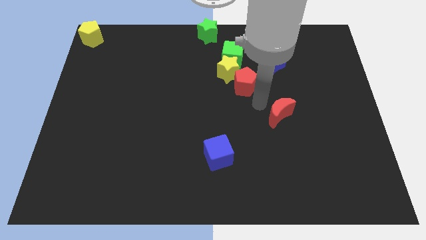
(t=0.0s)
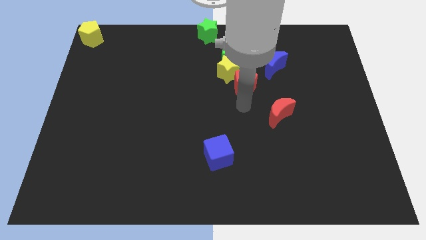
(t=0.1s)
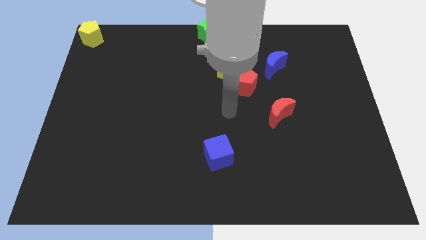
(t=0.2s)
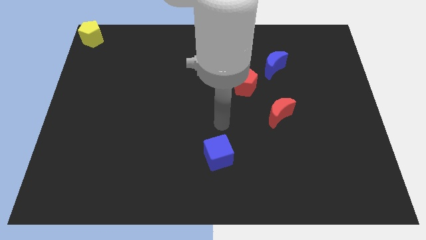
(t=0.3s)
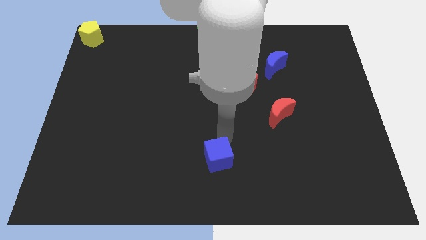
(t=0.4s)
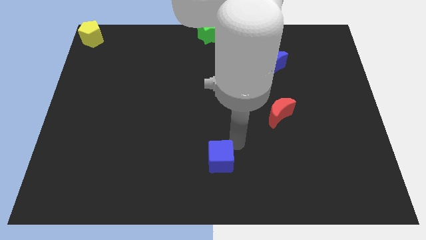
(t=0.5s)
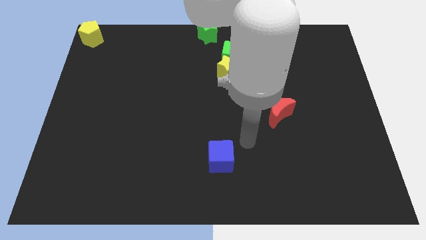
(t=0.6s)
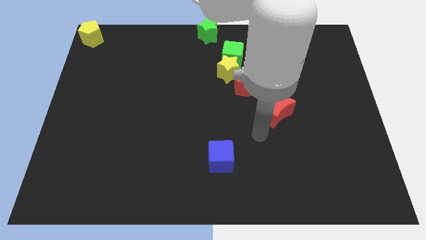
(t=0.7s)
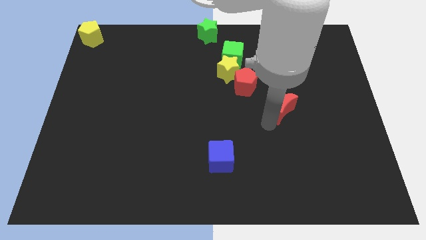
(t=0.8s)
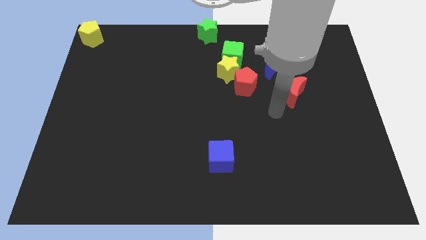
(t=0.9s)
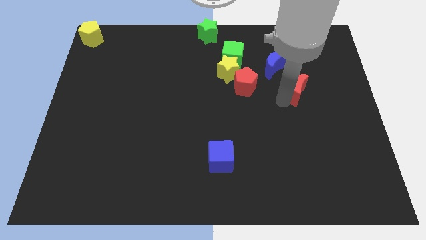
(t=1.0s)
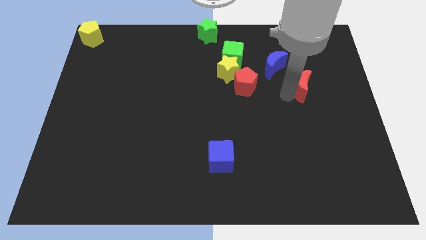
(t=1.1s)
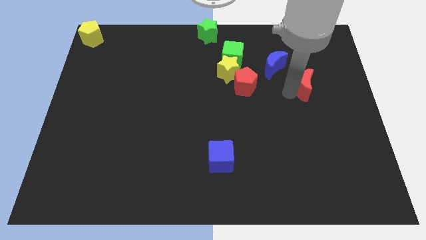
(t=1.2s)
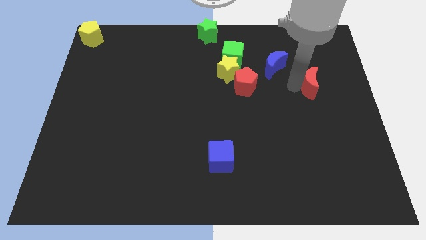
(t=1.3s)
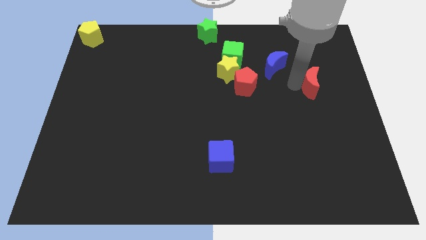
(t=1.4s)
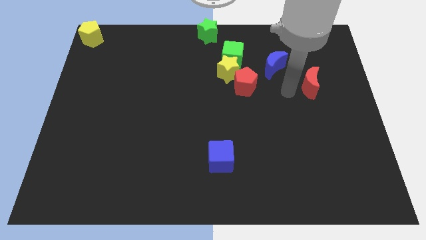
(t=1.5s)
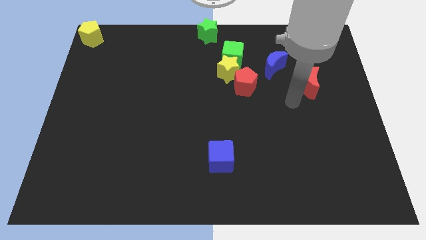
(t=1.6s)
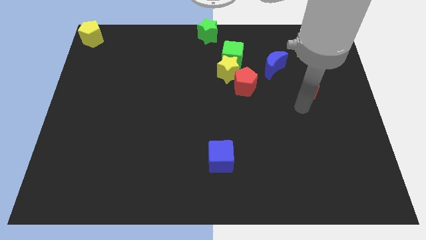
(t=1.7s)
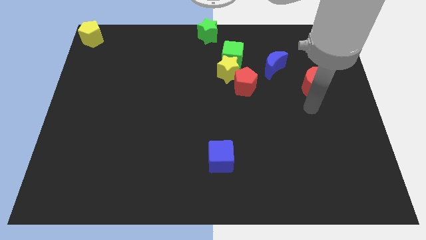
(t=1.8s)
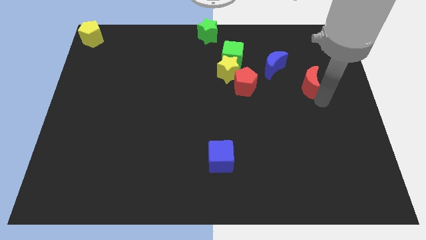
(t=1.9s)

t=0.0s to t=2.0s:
move the red moon right to the red pentagon

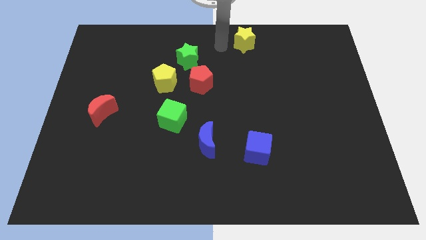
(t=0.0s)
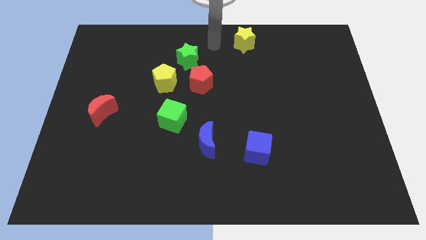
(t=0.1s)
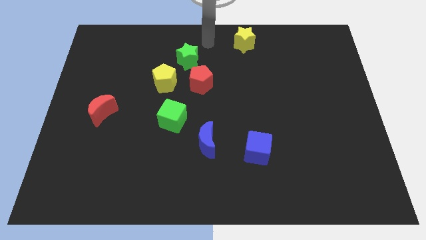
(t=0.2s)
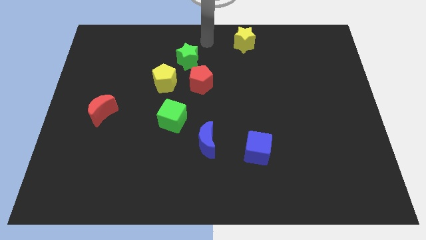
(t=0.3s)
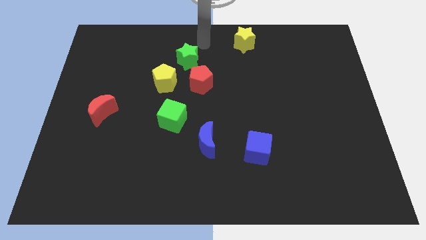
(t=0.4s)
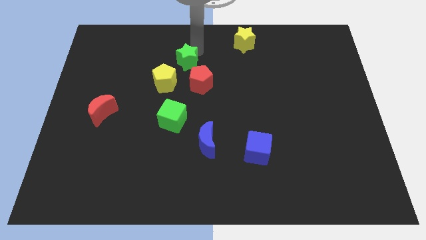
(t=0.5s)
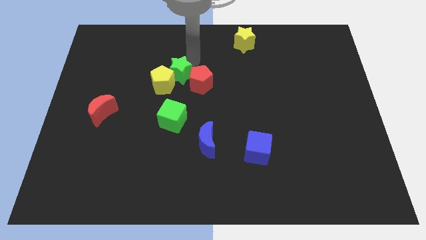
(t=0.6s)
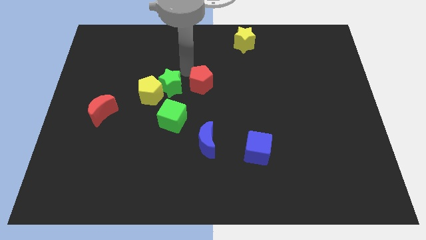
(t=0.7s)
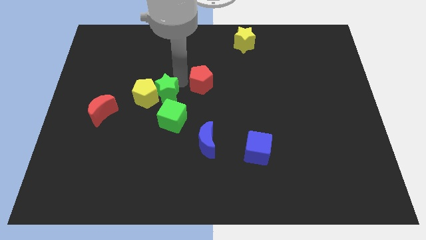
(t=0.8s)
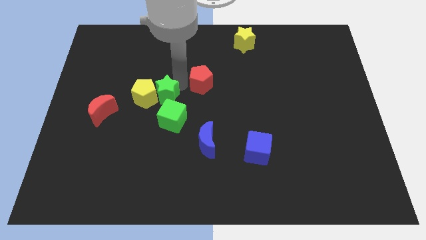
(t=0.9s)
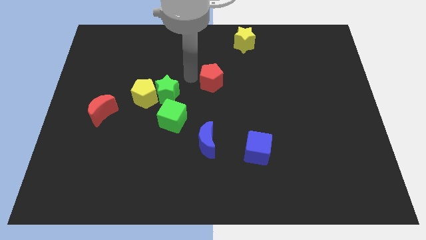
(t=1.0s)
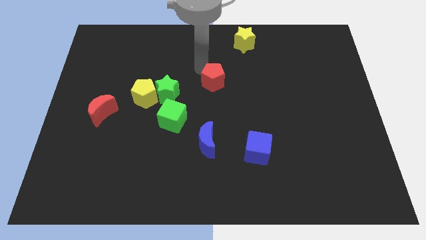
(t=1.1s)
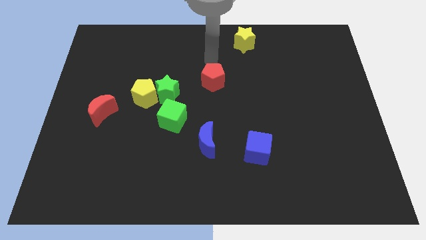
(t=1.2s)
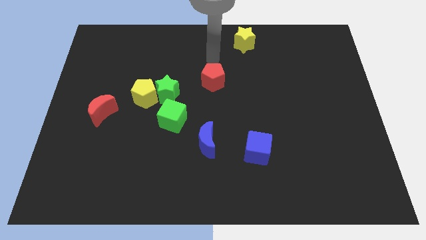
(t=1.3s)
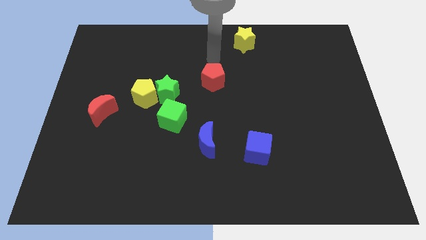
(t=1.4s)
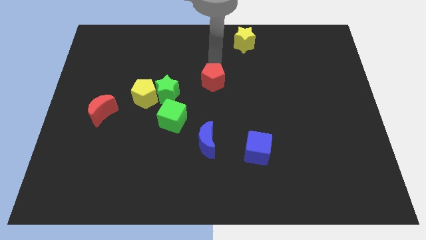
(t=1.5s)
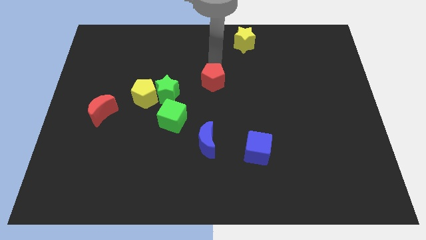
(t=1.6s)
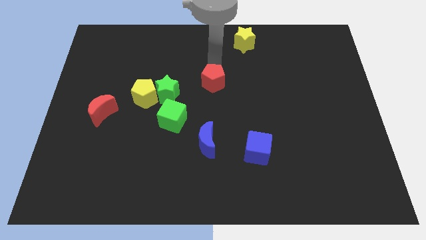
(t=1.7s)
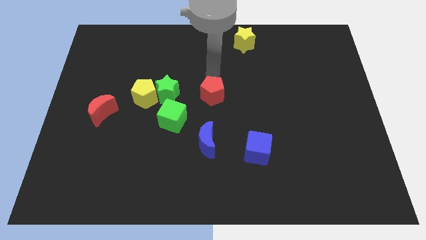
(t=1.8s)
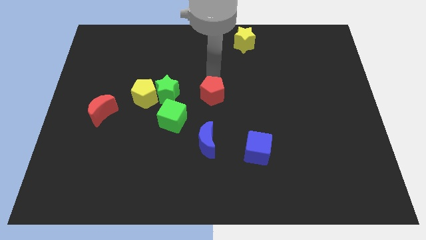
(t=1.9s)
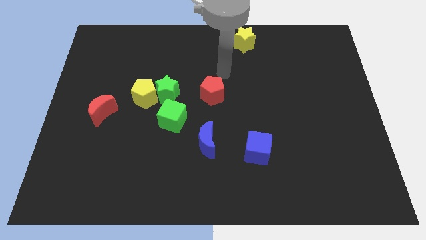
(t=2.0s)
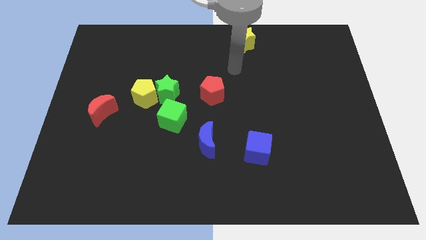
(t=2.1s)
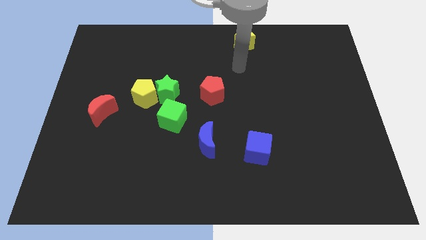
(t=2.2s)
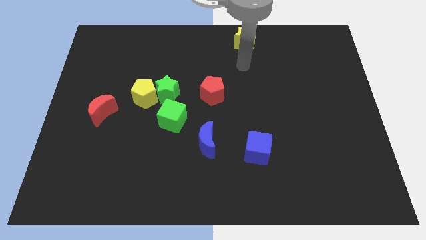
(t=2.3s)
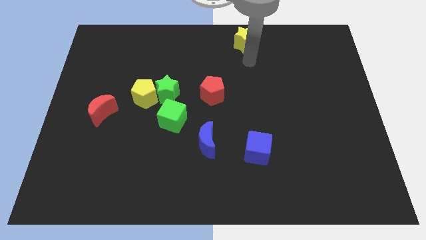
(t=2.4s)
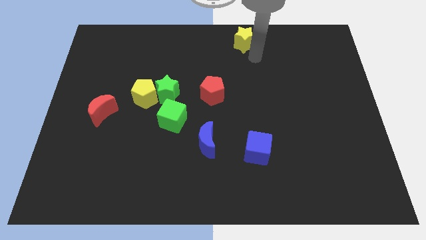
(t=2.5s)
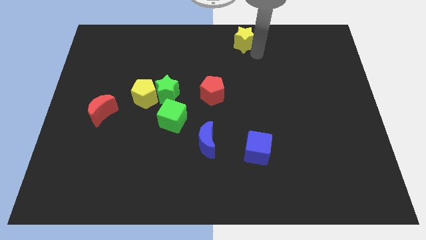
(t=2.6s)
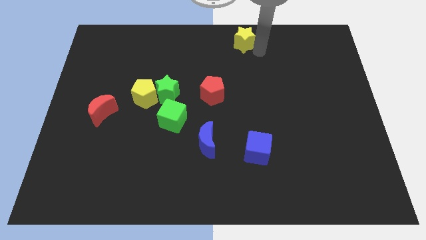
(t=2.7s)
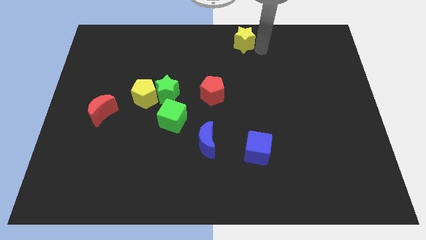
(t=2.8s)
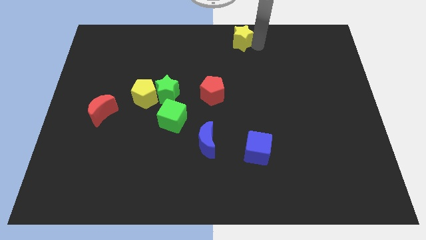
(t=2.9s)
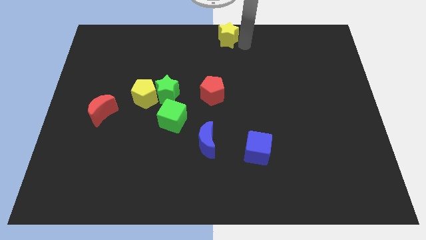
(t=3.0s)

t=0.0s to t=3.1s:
push red pentagon to the center of the board

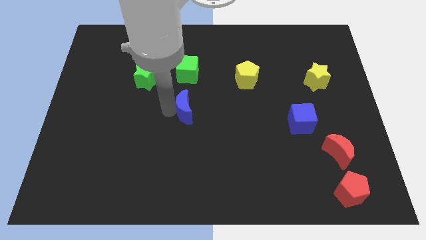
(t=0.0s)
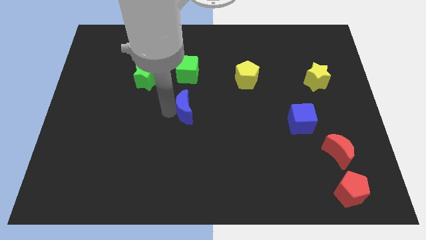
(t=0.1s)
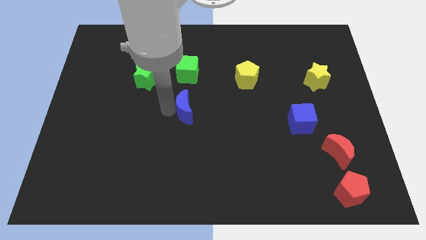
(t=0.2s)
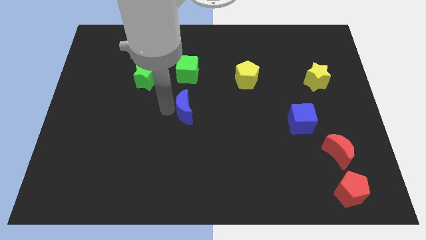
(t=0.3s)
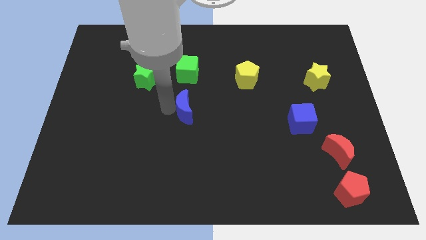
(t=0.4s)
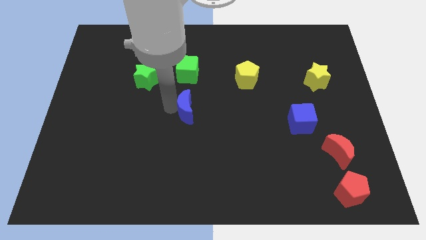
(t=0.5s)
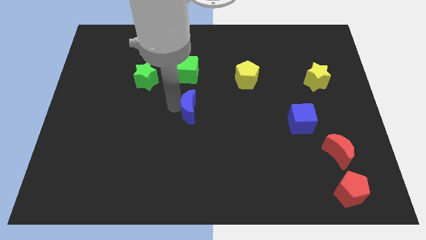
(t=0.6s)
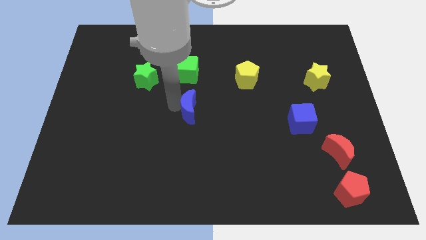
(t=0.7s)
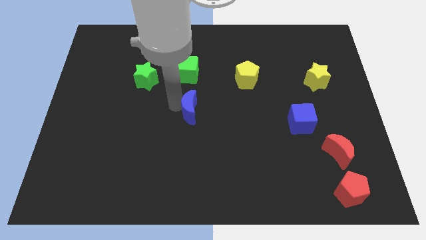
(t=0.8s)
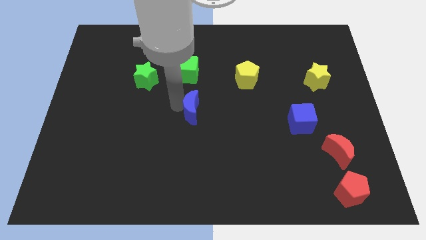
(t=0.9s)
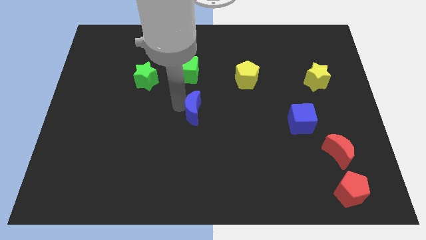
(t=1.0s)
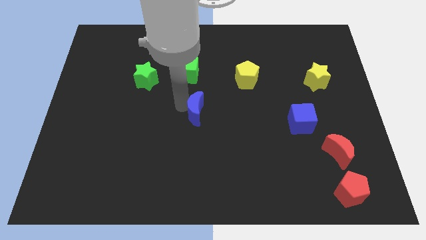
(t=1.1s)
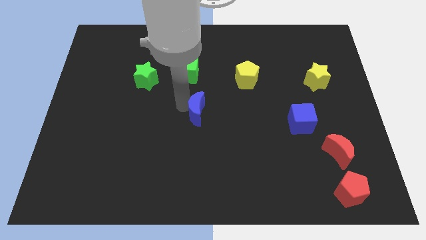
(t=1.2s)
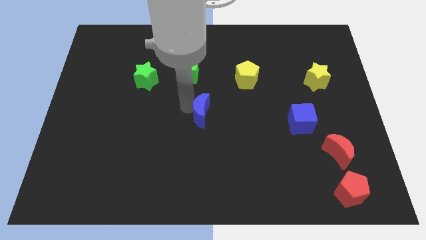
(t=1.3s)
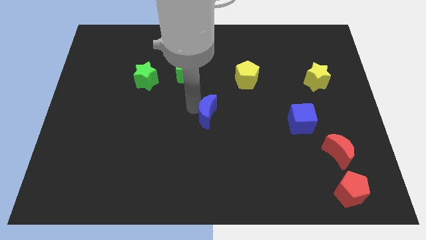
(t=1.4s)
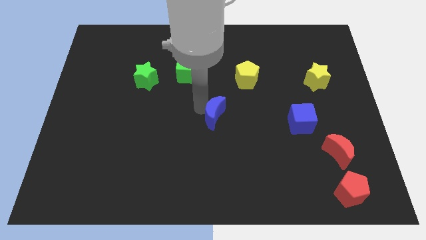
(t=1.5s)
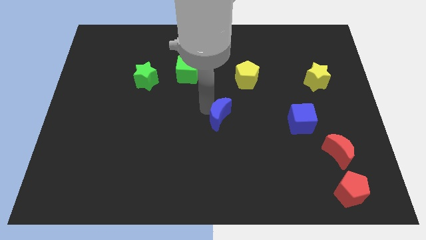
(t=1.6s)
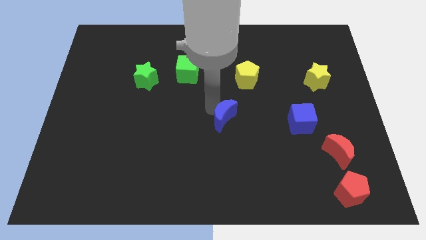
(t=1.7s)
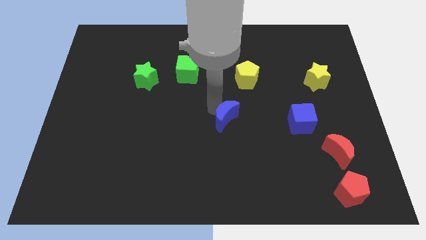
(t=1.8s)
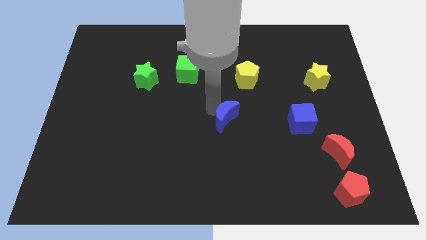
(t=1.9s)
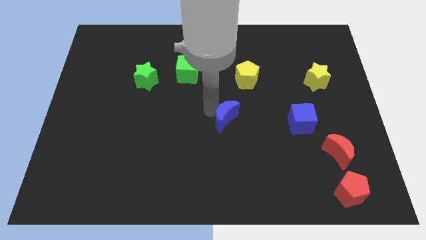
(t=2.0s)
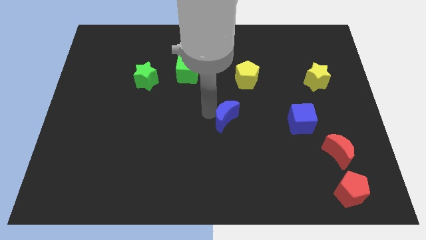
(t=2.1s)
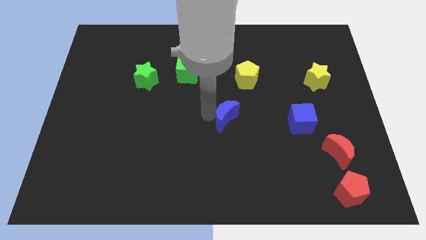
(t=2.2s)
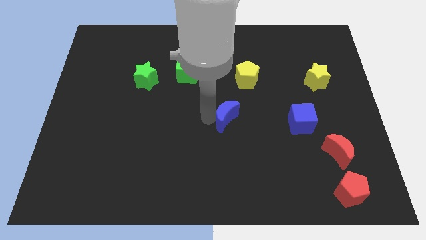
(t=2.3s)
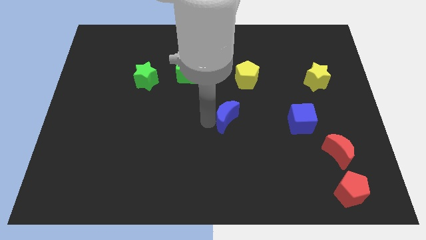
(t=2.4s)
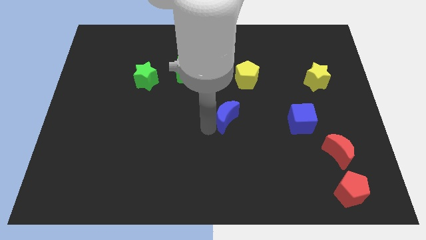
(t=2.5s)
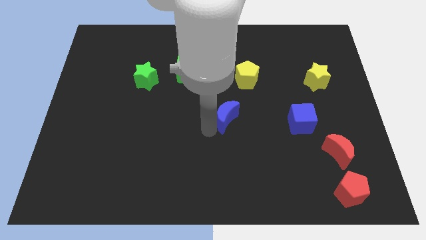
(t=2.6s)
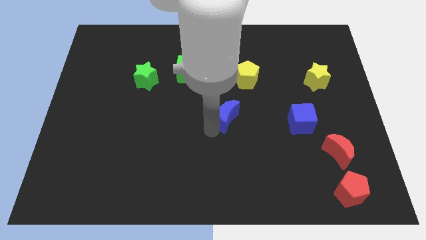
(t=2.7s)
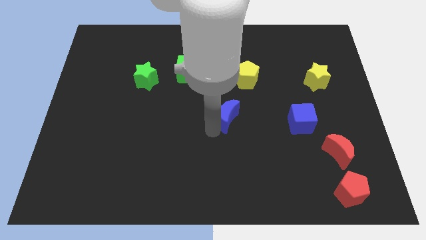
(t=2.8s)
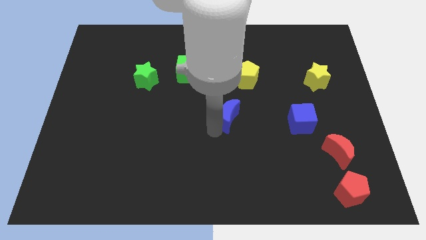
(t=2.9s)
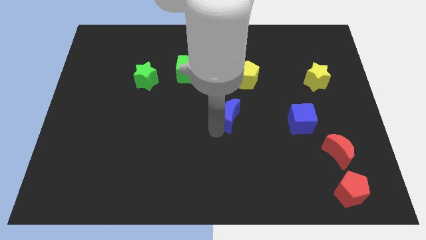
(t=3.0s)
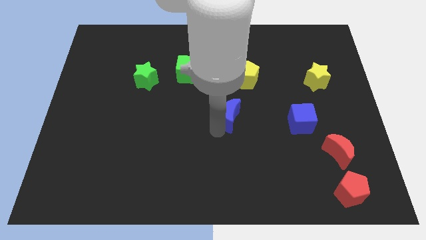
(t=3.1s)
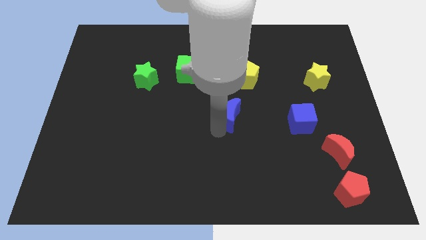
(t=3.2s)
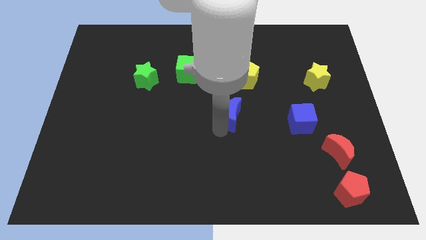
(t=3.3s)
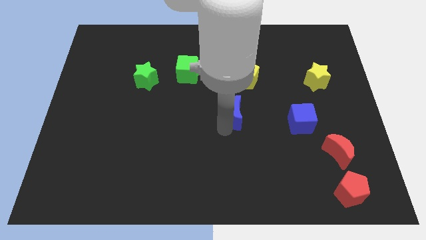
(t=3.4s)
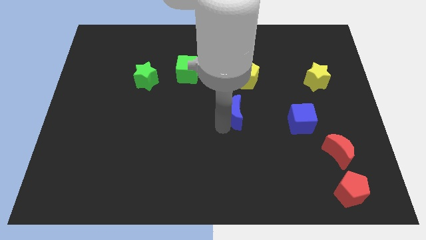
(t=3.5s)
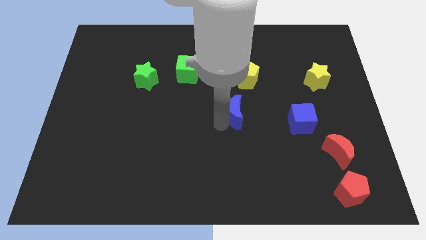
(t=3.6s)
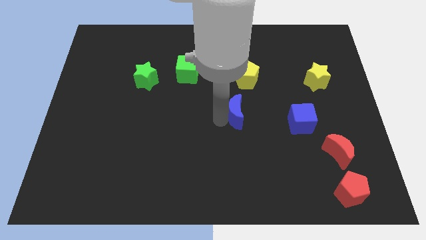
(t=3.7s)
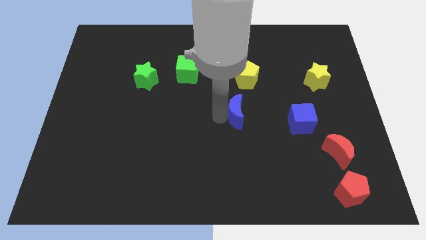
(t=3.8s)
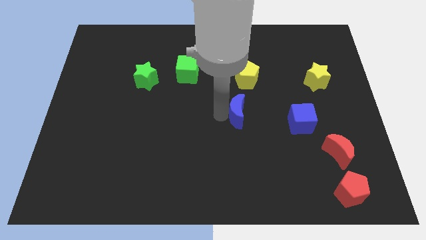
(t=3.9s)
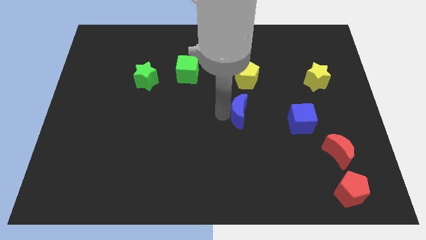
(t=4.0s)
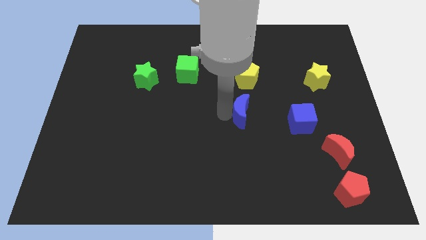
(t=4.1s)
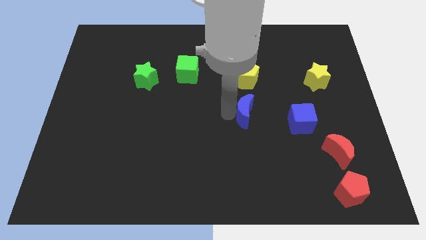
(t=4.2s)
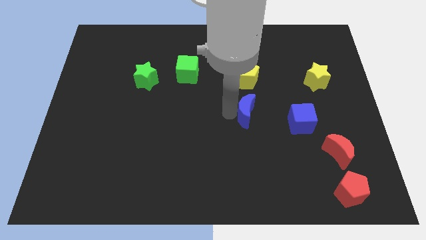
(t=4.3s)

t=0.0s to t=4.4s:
slide the blue crescent vertically below the yellow pentagon
